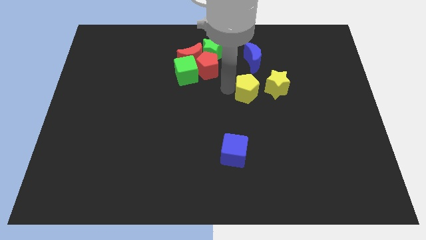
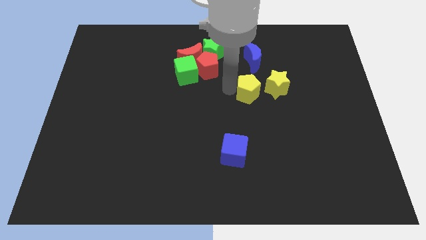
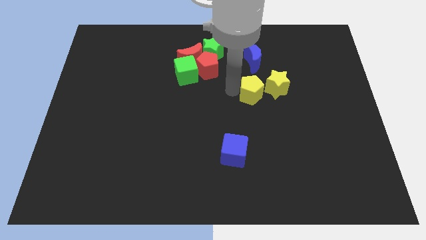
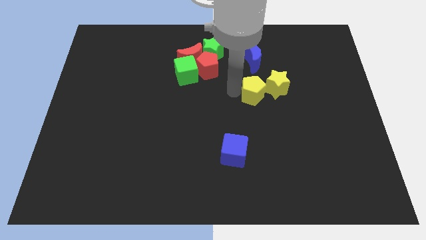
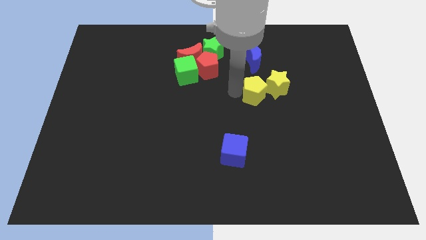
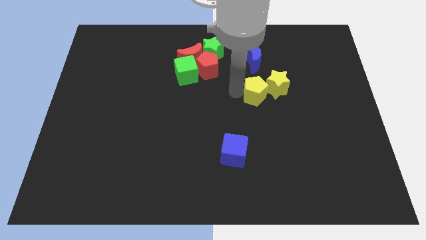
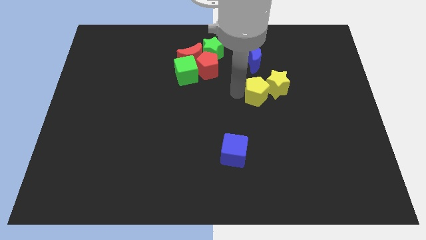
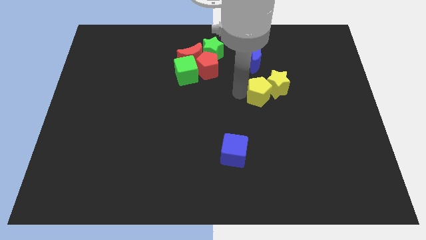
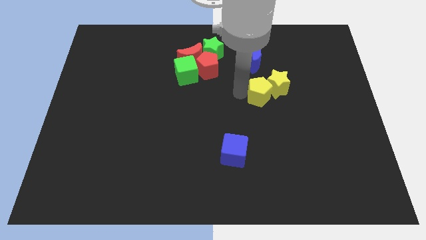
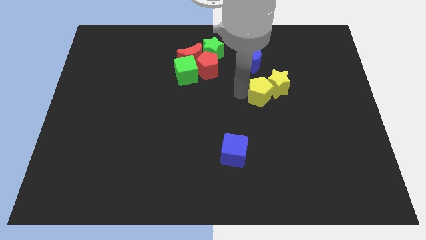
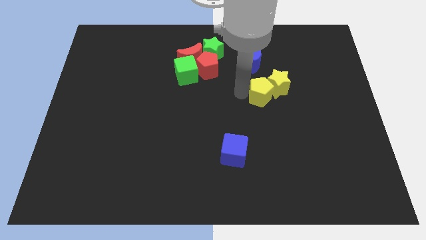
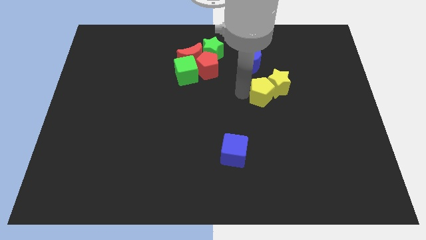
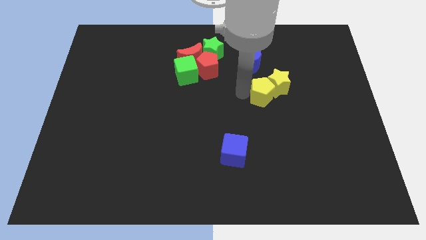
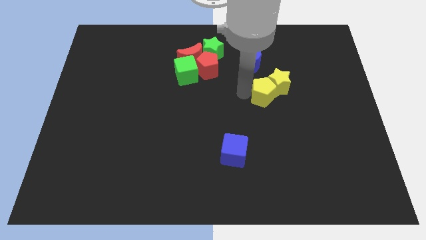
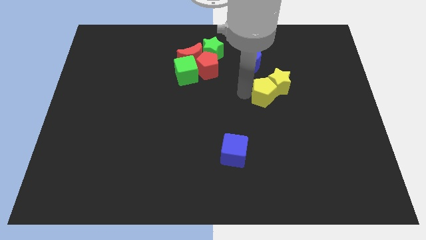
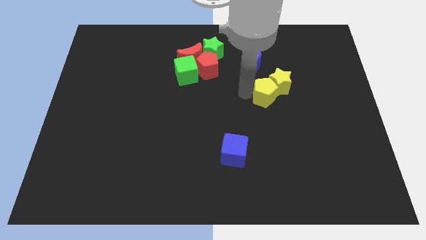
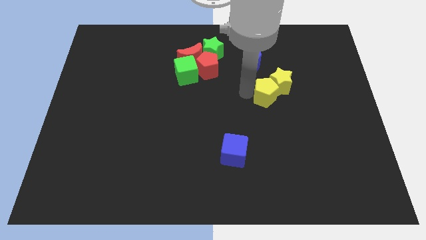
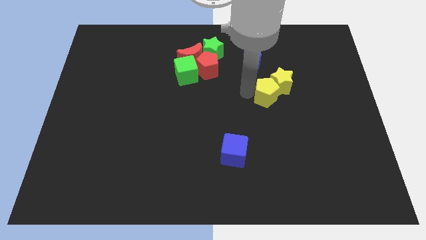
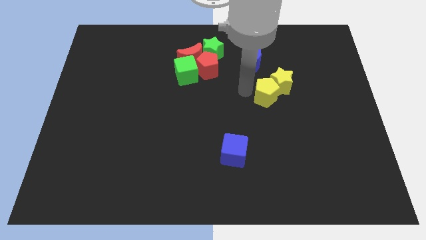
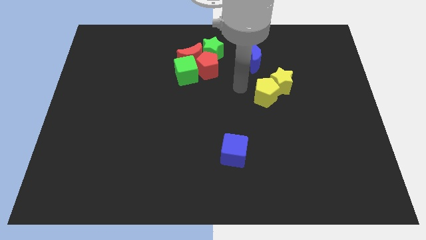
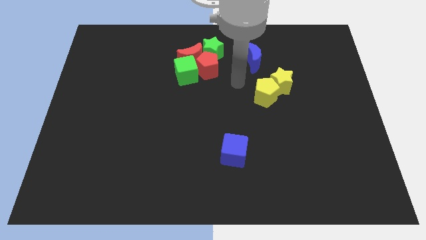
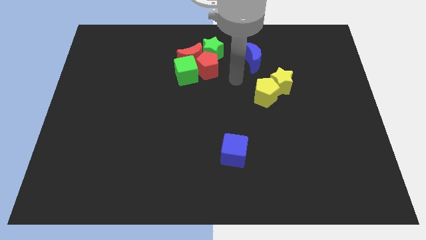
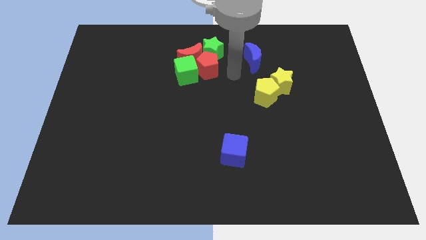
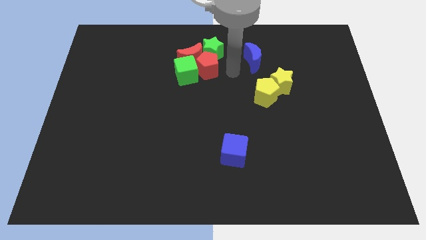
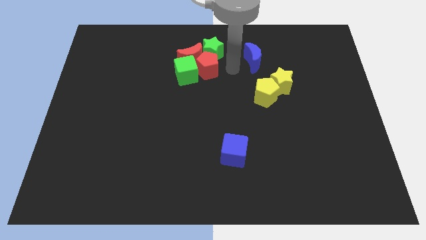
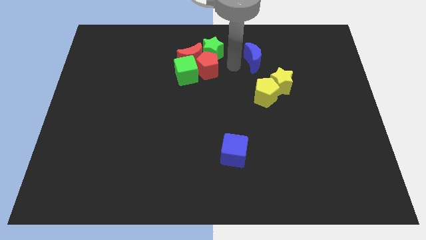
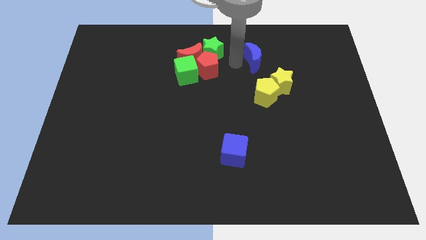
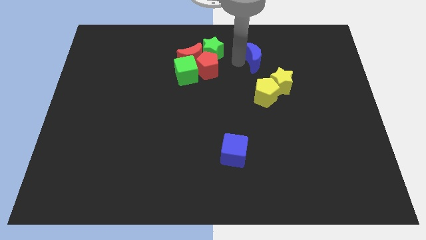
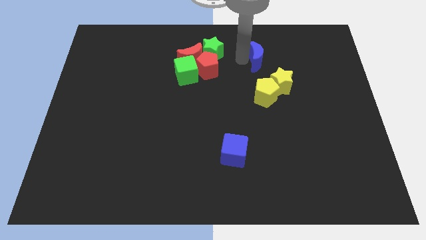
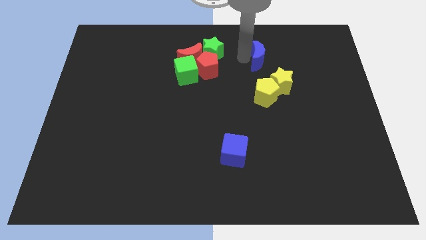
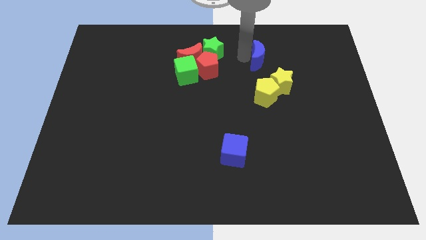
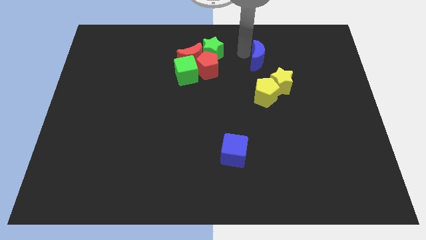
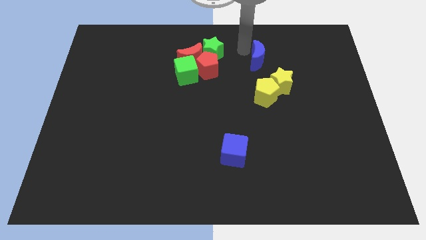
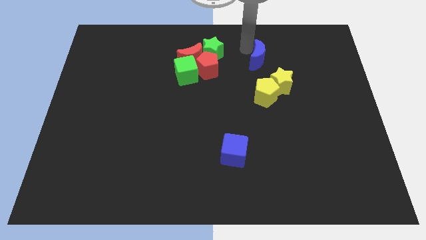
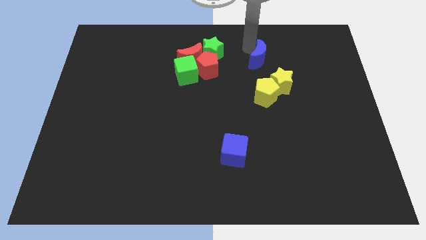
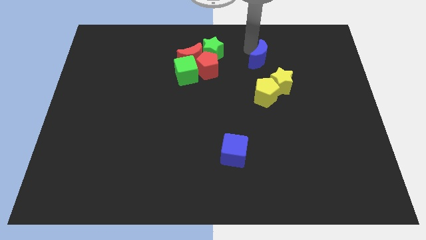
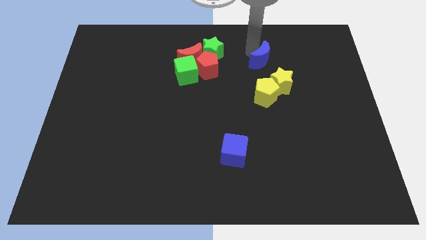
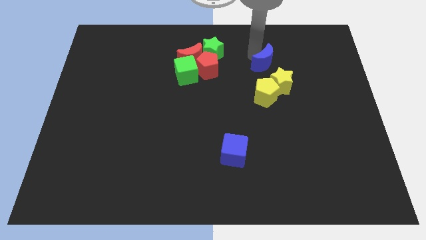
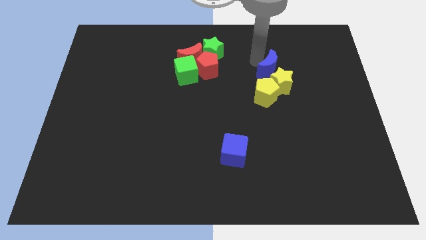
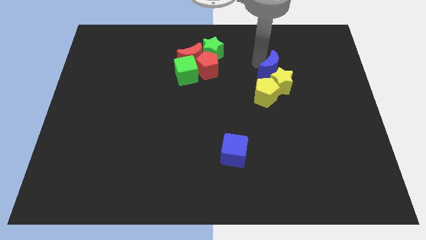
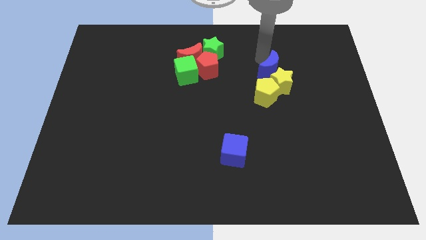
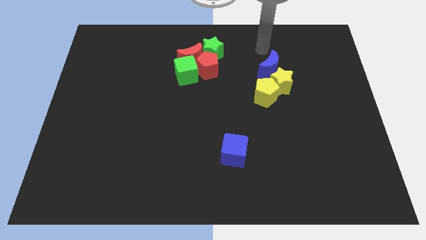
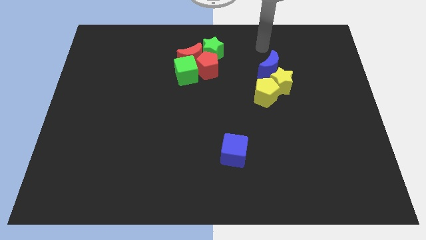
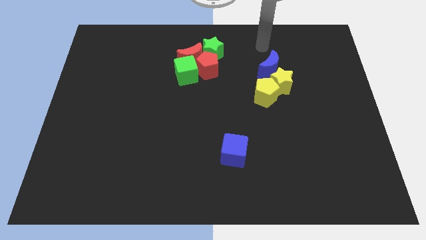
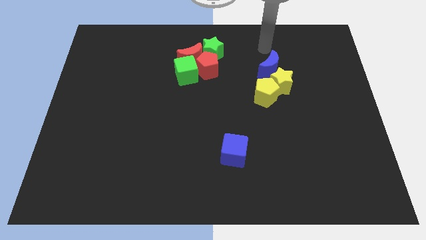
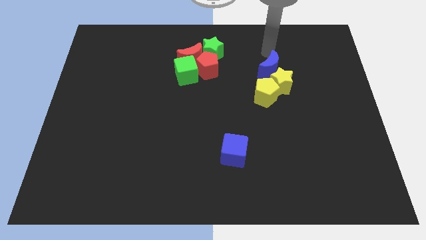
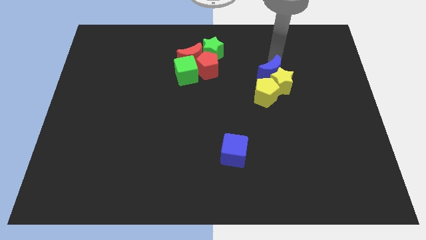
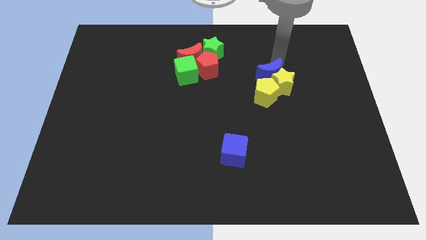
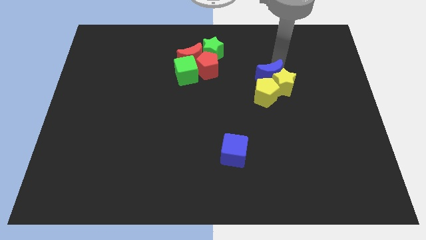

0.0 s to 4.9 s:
slide the blue crescent to the top of the yellow star

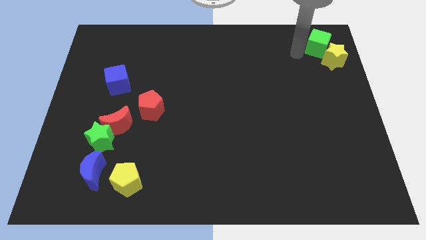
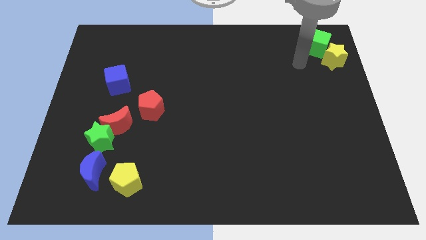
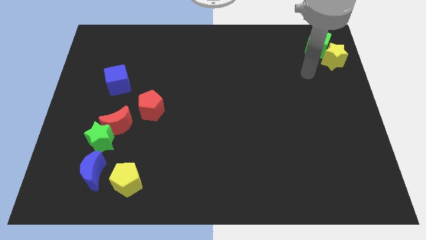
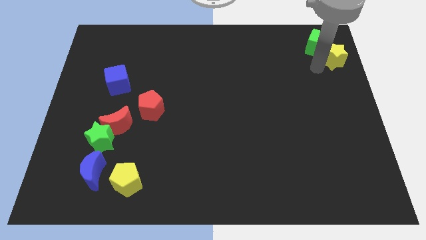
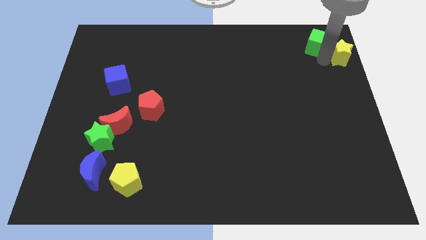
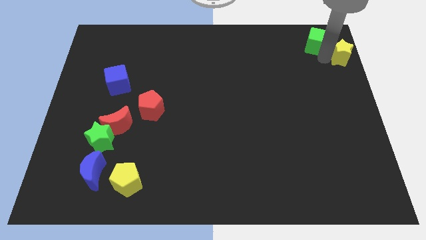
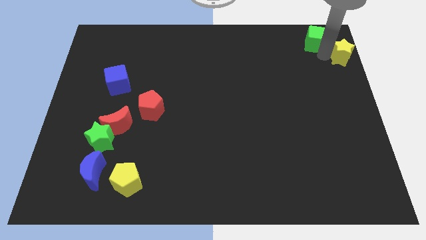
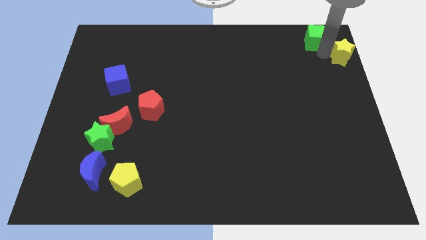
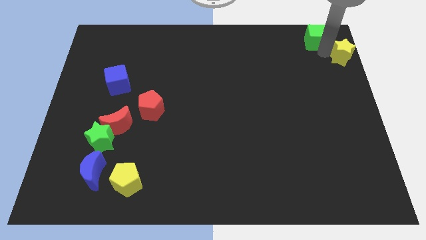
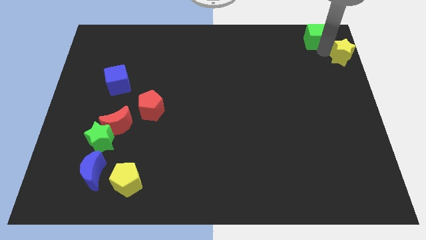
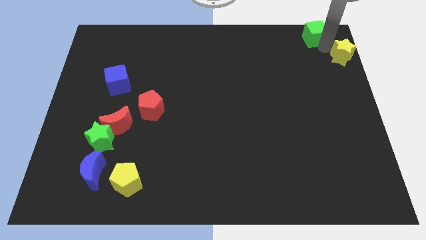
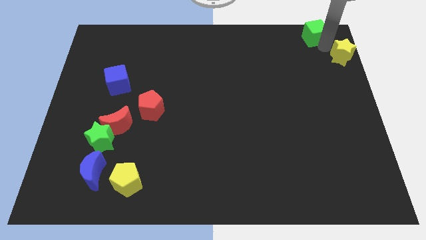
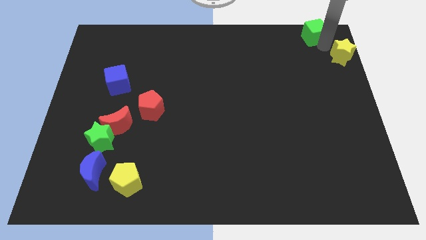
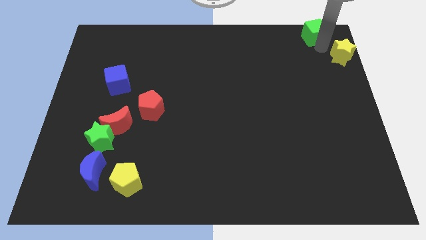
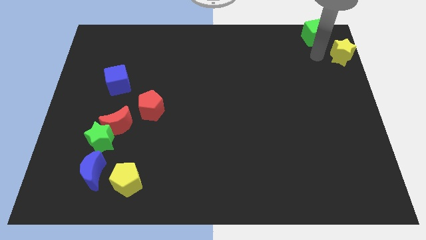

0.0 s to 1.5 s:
separate the green cube and yellow star from each other

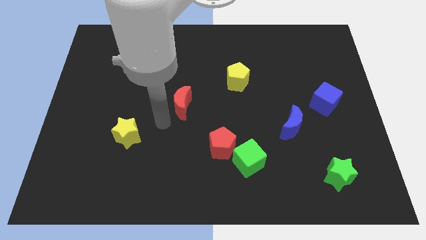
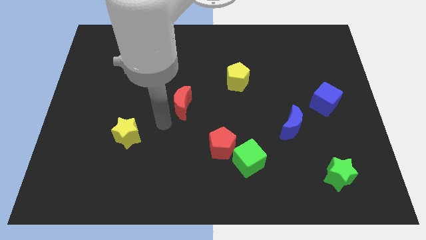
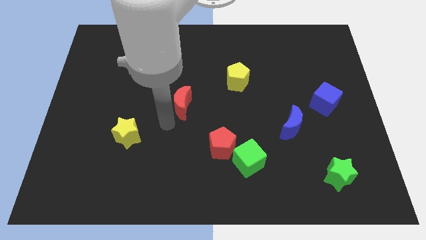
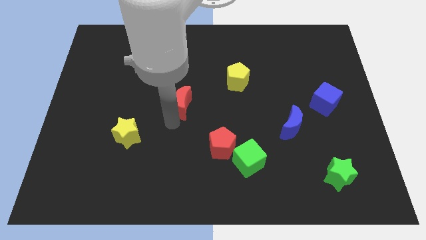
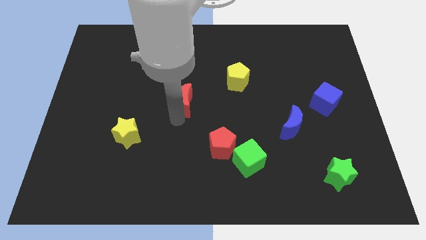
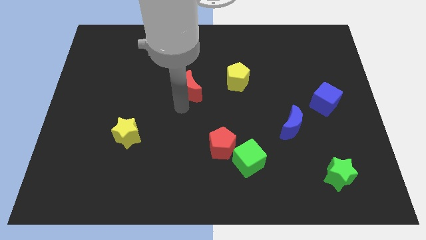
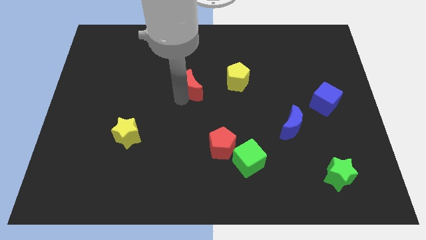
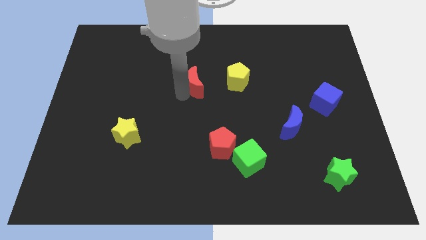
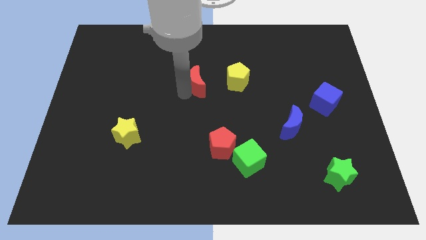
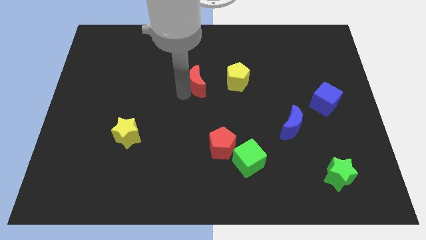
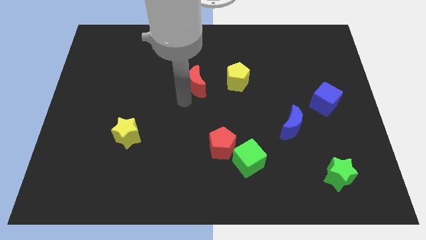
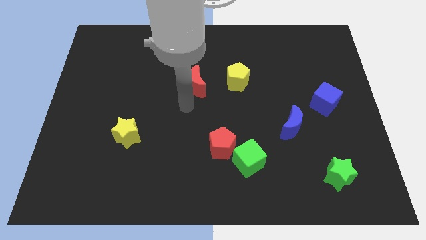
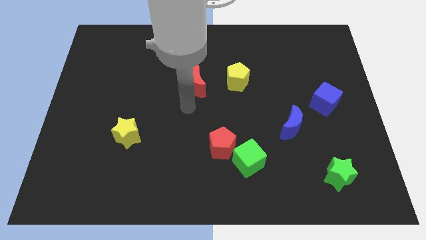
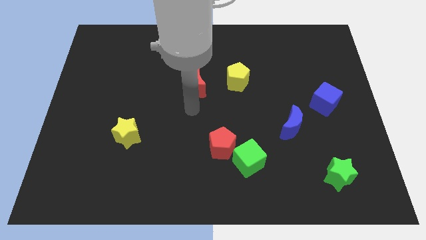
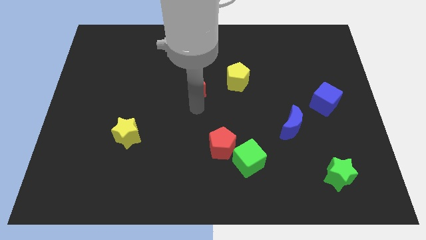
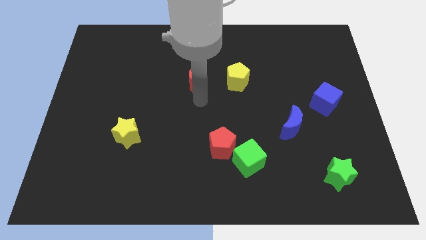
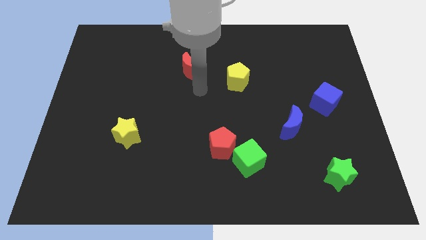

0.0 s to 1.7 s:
move red moon to the left of the yellow pentagon

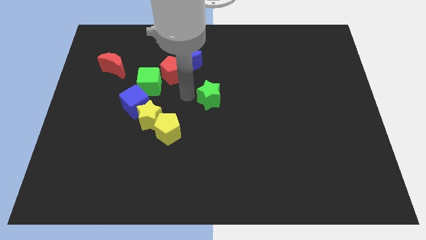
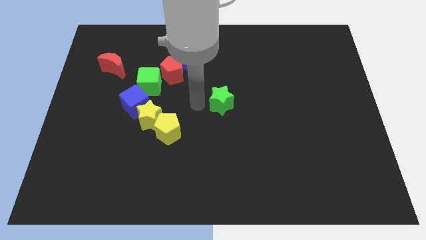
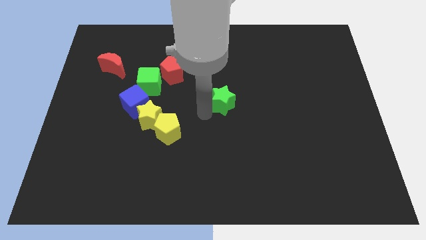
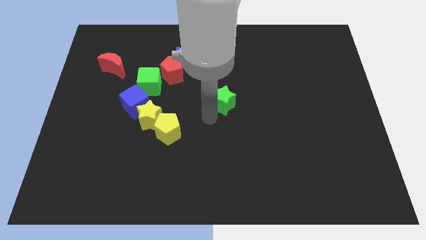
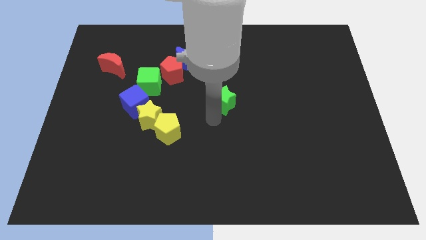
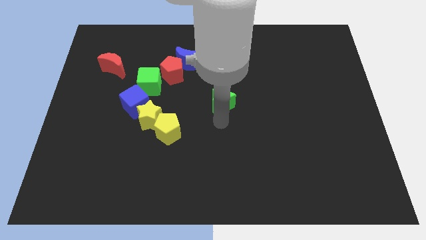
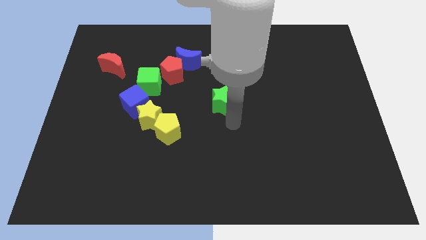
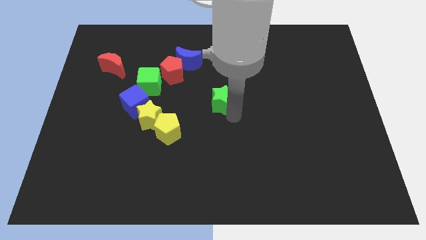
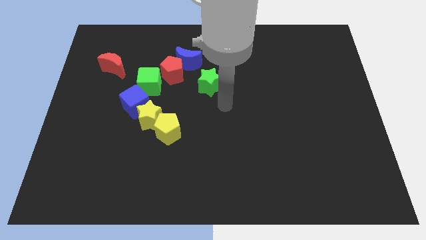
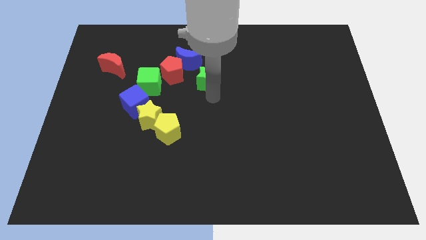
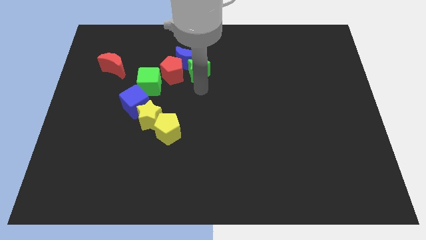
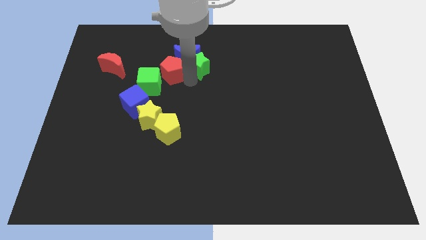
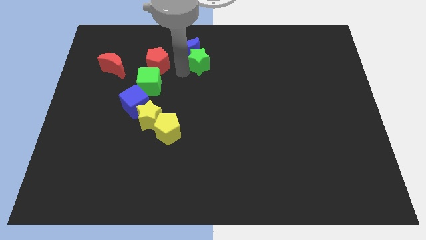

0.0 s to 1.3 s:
move the green star into the blue crescent
